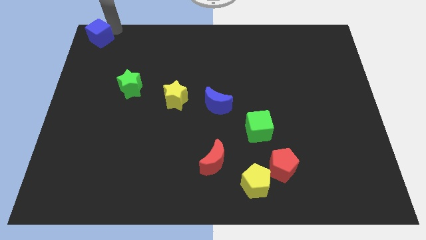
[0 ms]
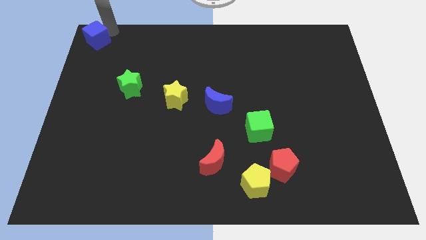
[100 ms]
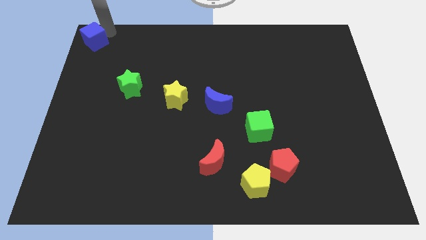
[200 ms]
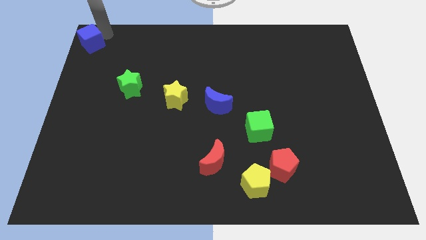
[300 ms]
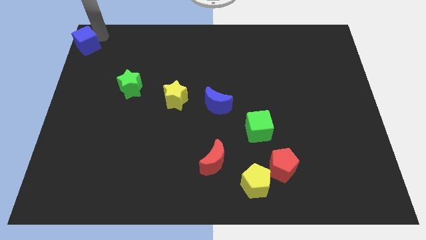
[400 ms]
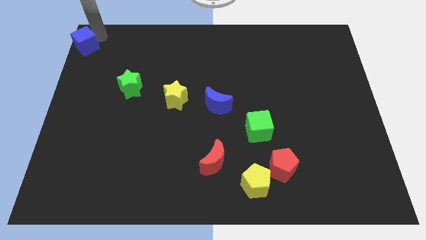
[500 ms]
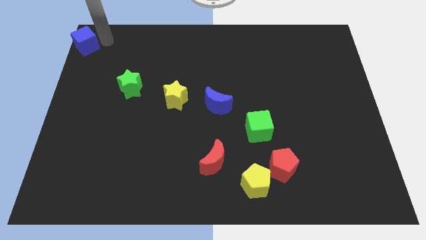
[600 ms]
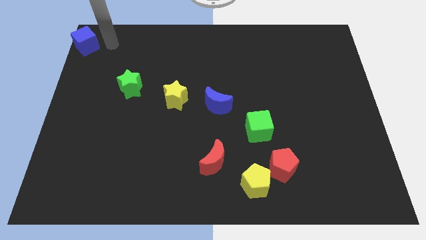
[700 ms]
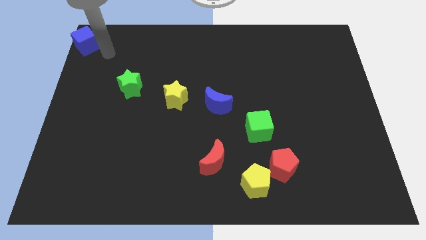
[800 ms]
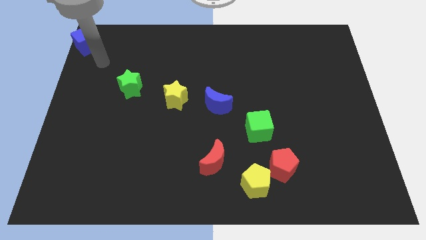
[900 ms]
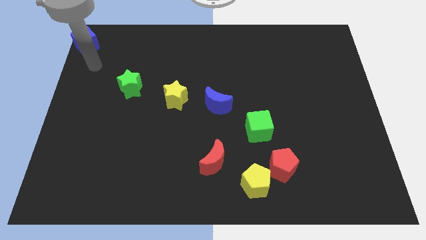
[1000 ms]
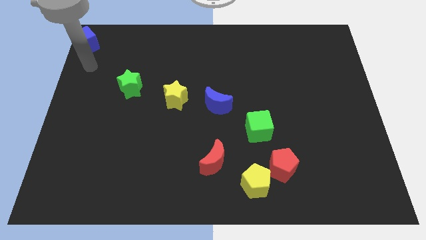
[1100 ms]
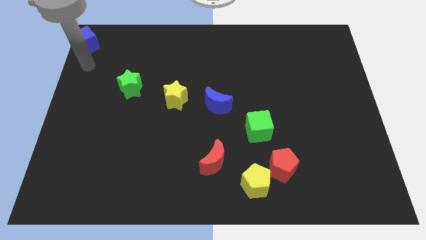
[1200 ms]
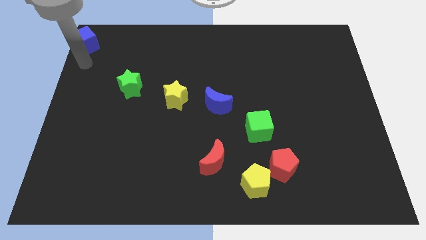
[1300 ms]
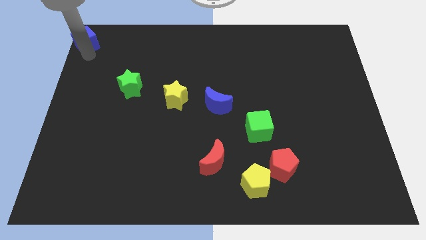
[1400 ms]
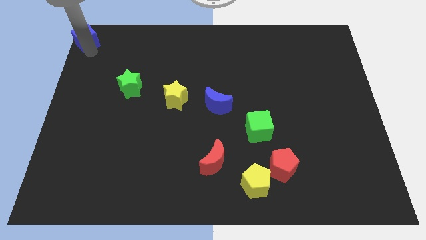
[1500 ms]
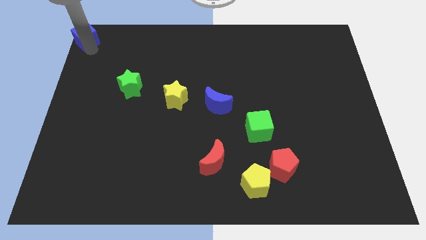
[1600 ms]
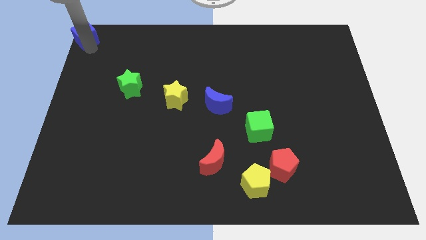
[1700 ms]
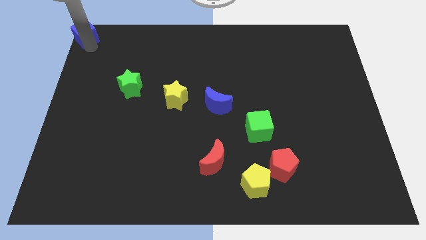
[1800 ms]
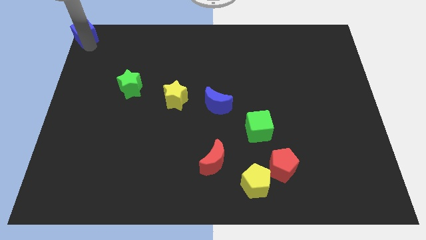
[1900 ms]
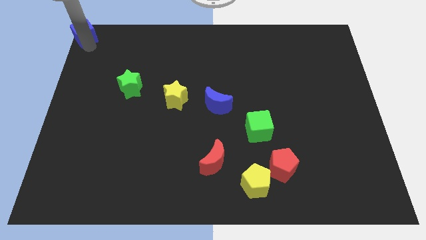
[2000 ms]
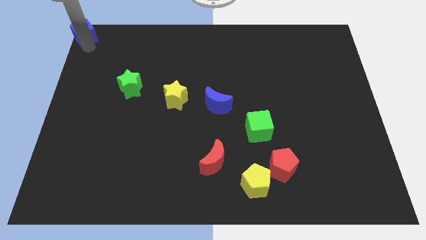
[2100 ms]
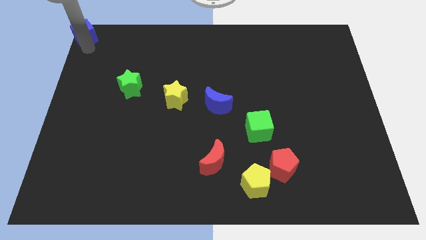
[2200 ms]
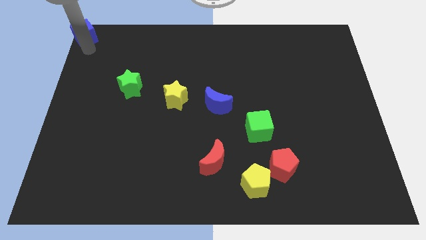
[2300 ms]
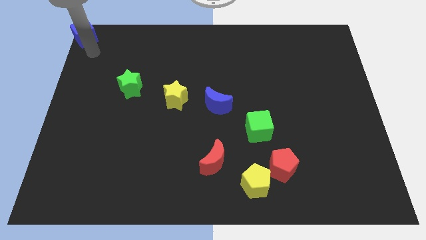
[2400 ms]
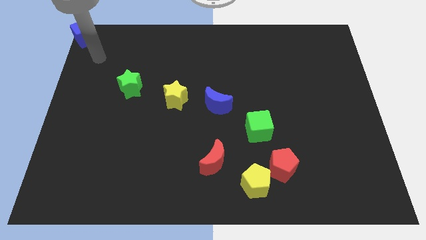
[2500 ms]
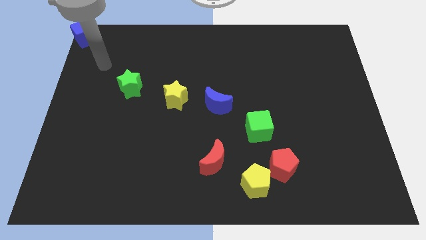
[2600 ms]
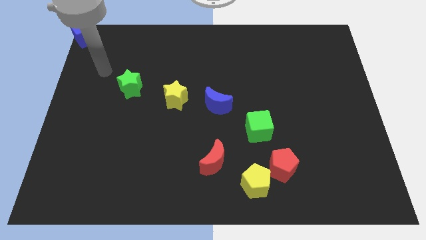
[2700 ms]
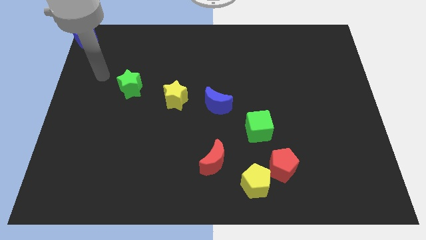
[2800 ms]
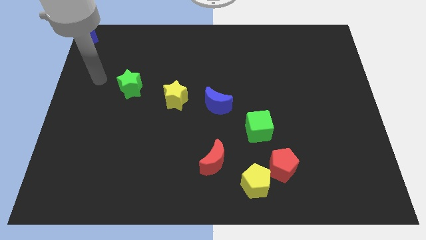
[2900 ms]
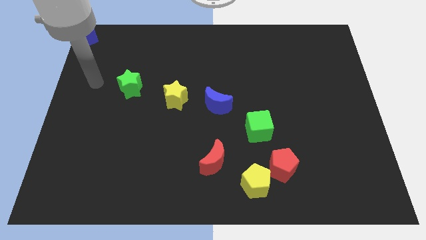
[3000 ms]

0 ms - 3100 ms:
slightly push the blue block to the top left corner of the board

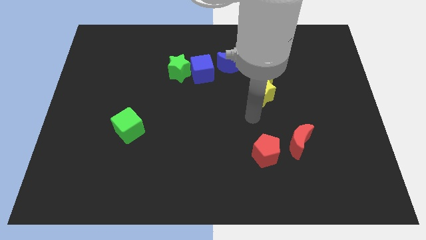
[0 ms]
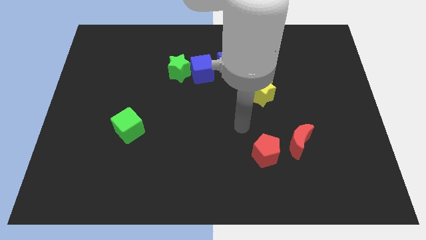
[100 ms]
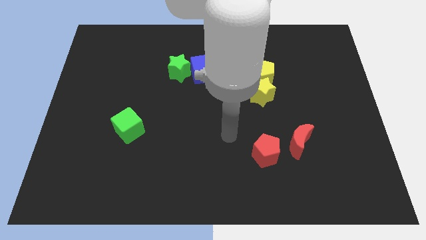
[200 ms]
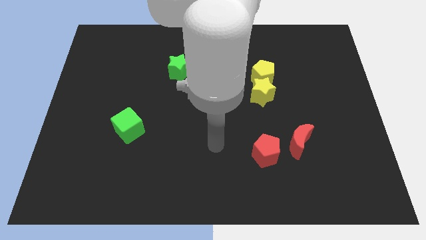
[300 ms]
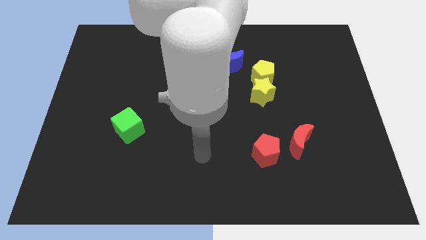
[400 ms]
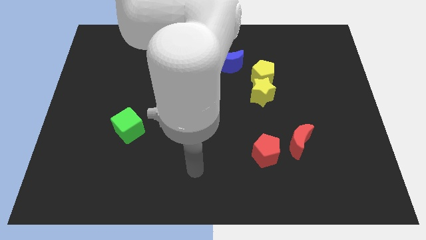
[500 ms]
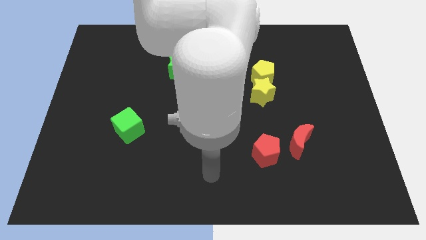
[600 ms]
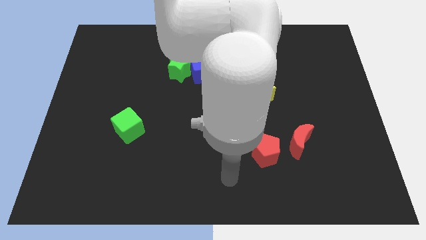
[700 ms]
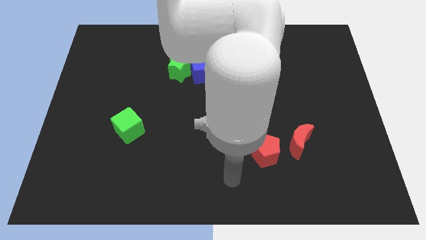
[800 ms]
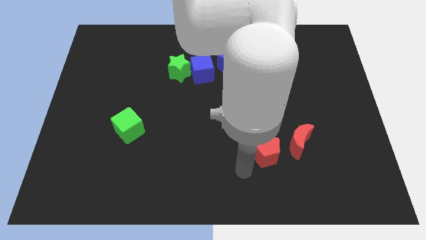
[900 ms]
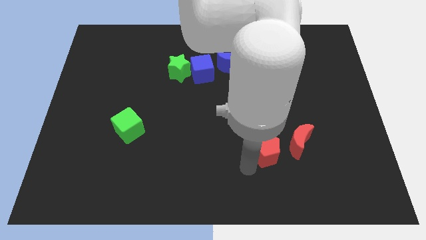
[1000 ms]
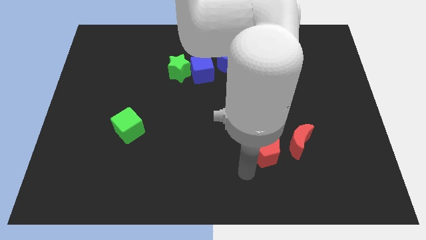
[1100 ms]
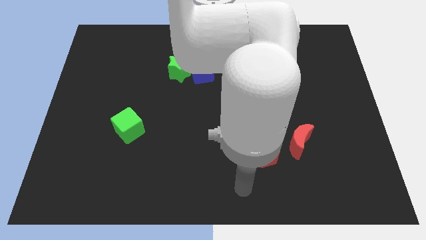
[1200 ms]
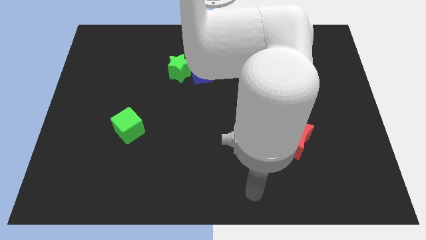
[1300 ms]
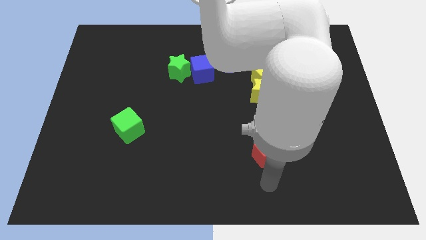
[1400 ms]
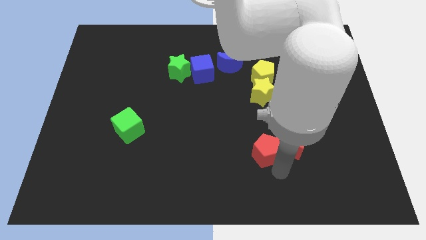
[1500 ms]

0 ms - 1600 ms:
point your arm below red pentagon

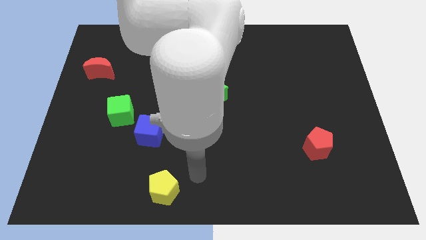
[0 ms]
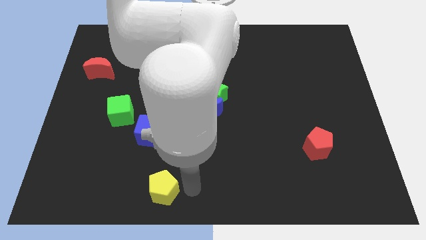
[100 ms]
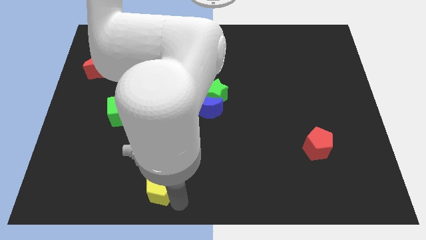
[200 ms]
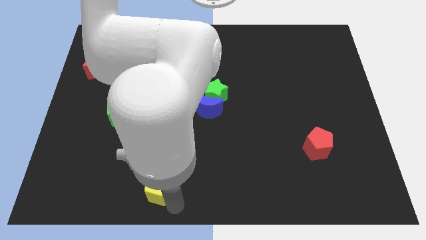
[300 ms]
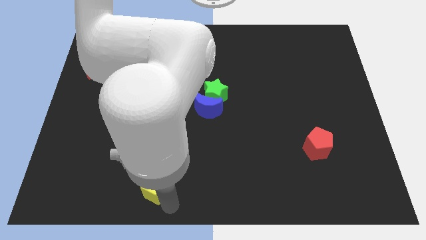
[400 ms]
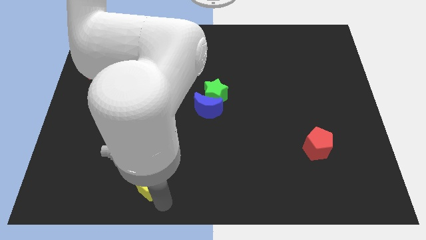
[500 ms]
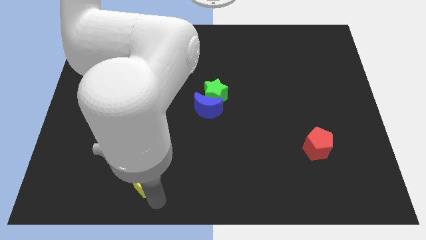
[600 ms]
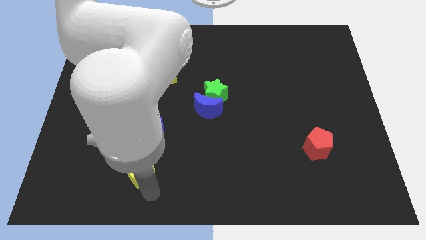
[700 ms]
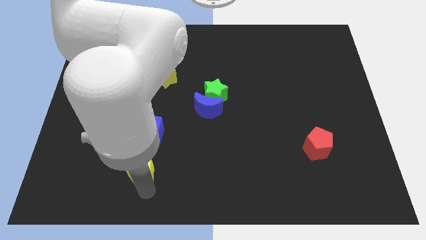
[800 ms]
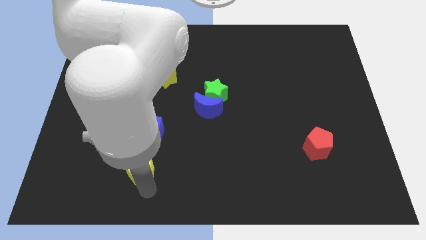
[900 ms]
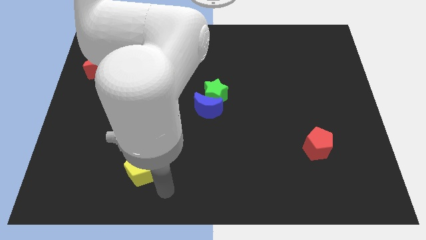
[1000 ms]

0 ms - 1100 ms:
place yellow pentagon below blue cube

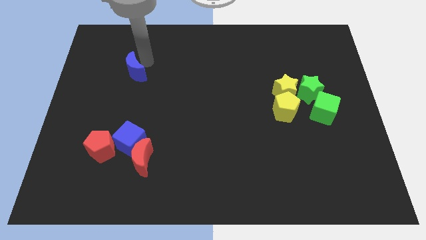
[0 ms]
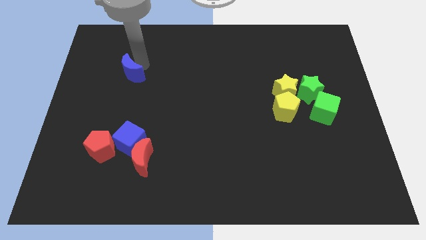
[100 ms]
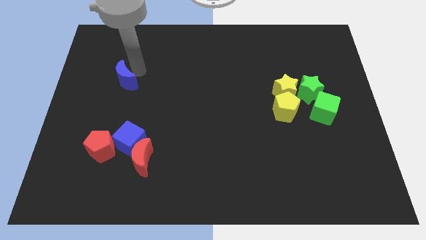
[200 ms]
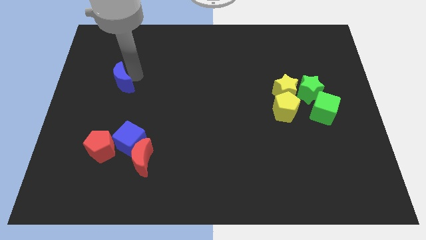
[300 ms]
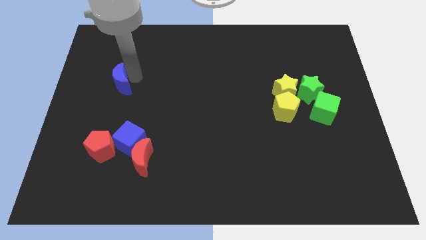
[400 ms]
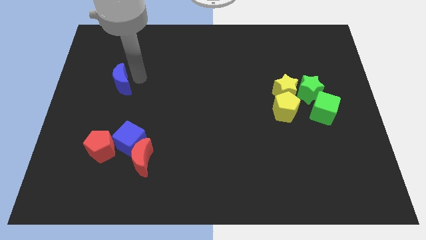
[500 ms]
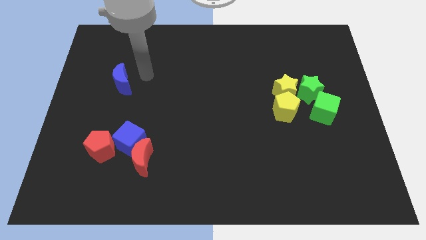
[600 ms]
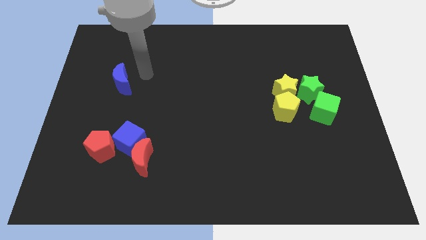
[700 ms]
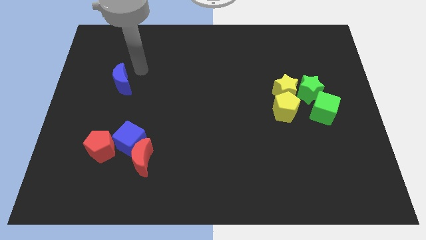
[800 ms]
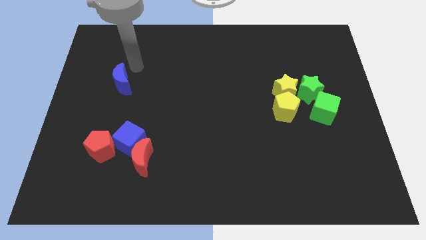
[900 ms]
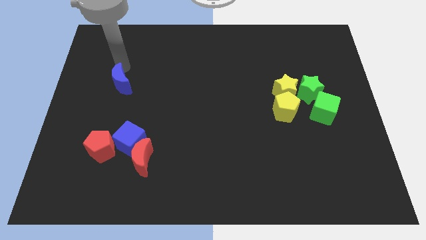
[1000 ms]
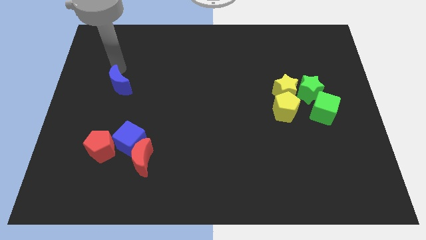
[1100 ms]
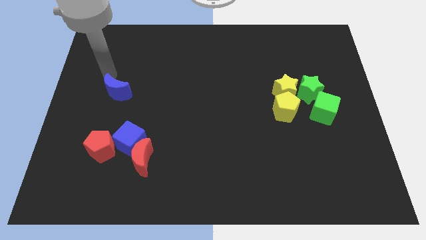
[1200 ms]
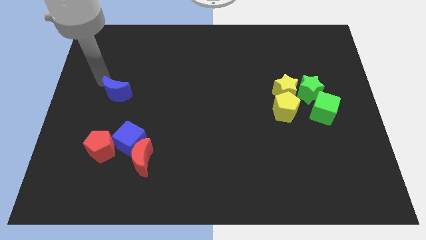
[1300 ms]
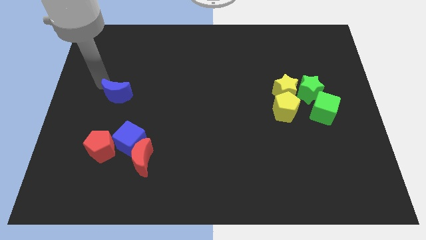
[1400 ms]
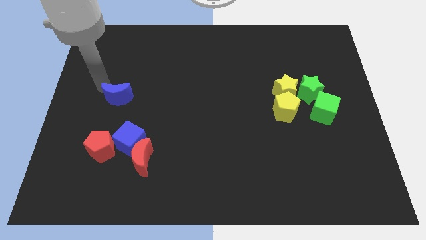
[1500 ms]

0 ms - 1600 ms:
push the blue crescent towards the red pentagon

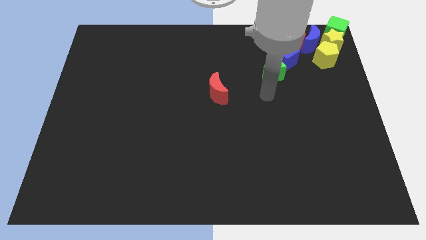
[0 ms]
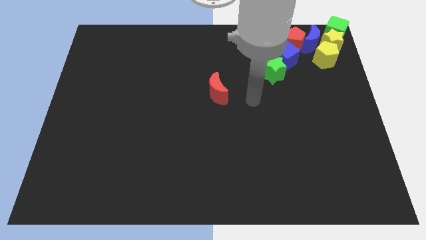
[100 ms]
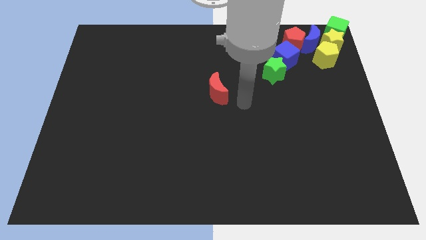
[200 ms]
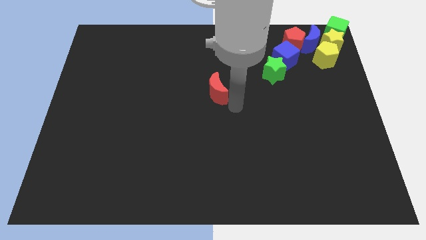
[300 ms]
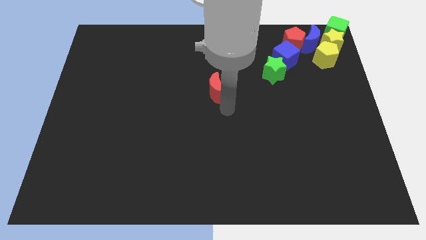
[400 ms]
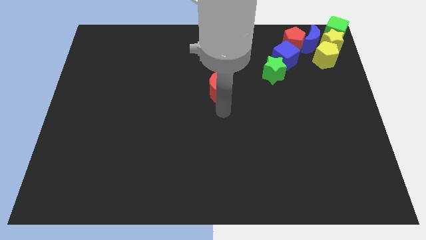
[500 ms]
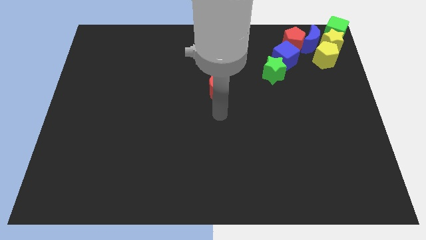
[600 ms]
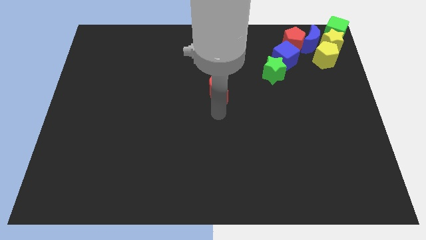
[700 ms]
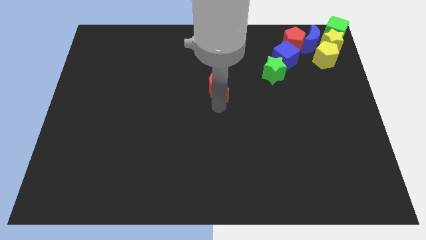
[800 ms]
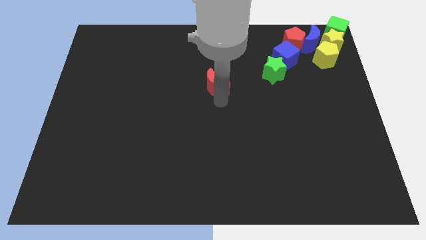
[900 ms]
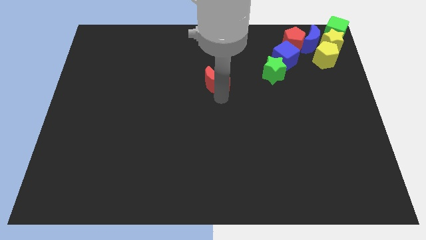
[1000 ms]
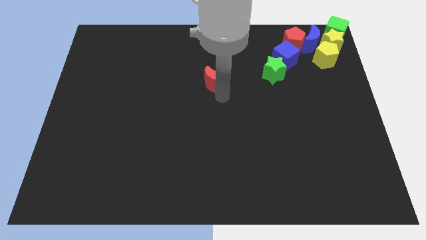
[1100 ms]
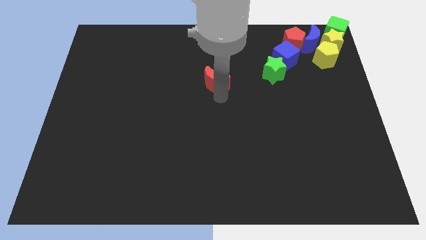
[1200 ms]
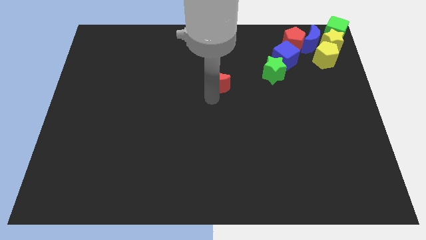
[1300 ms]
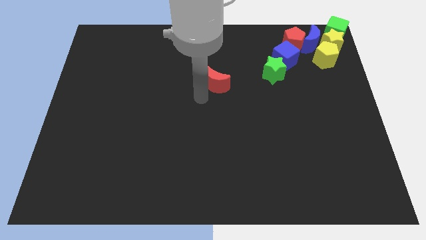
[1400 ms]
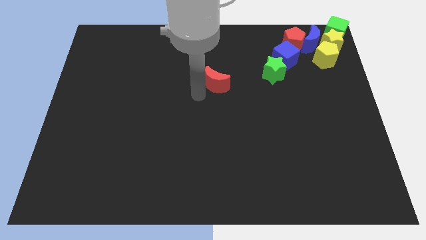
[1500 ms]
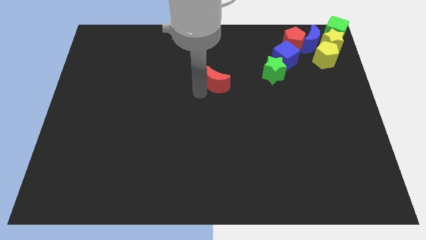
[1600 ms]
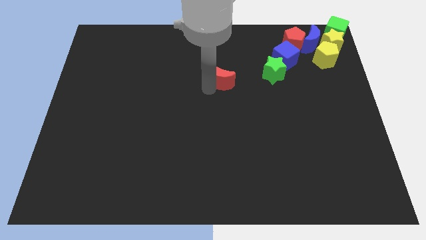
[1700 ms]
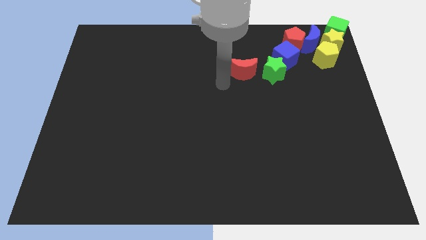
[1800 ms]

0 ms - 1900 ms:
put the red crescent to the left of the green star
